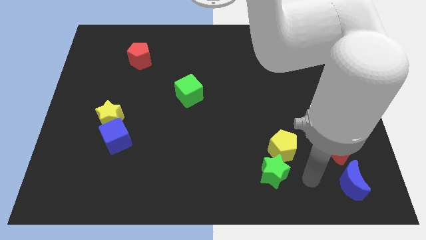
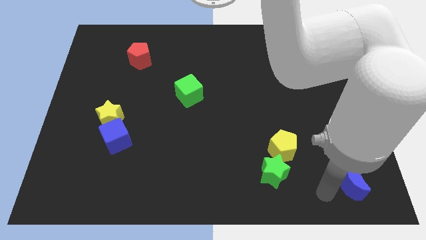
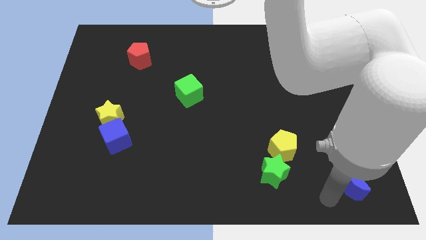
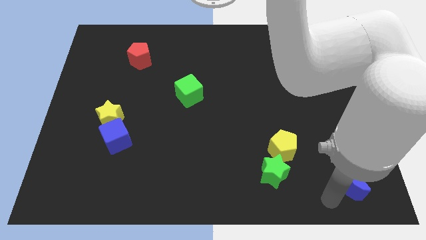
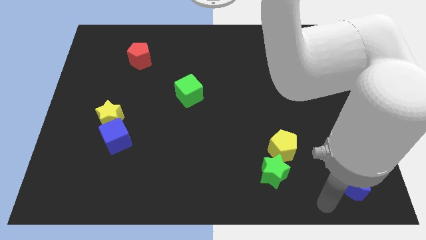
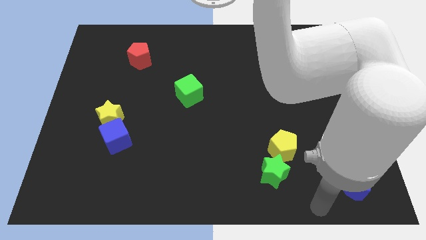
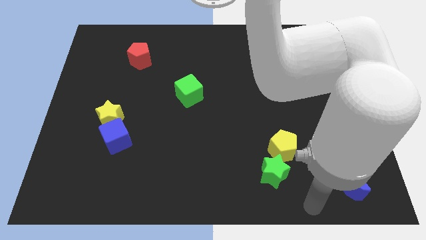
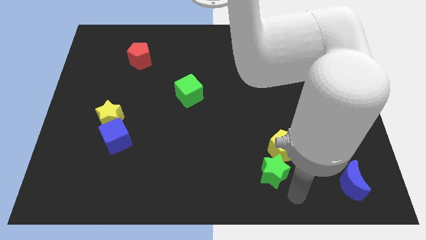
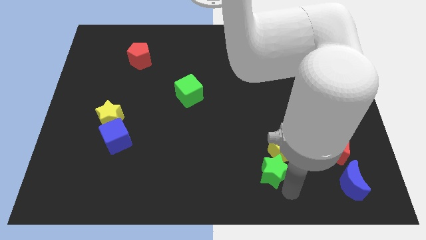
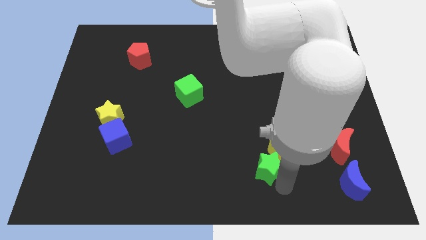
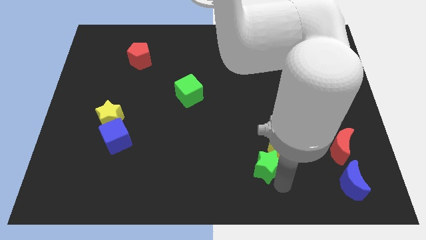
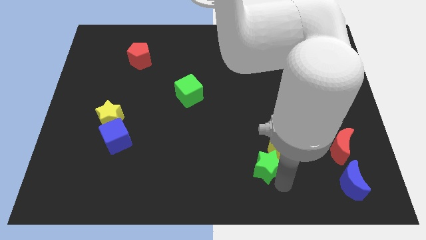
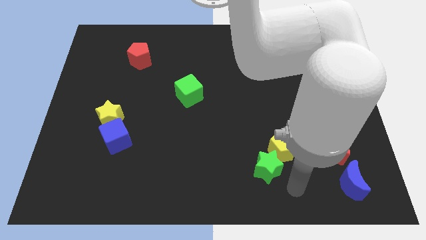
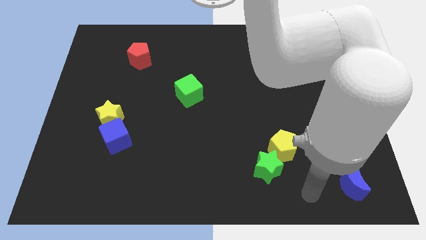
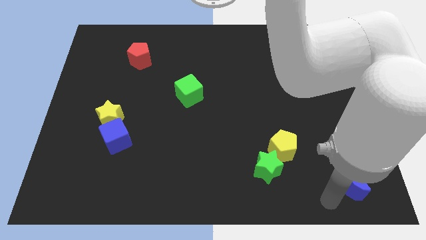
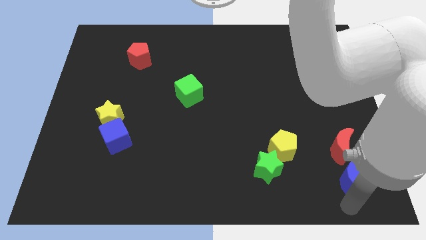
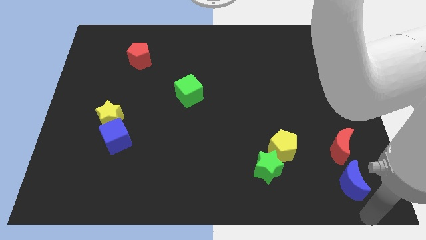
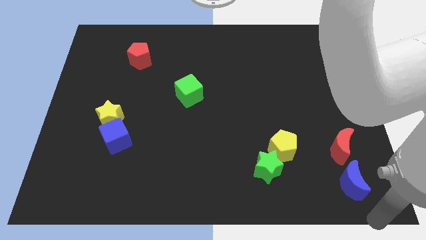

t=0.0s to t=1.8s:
move the green star towards the yellow pentagon

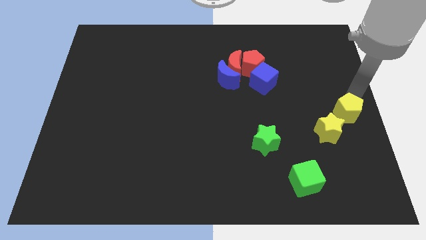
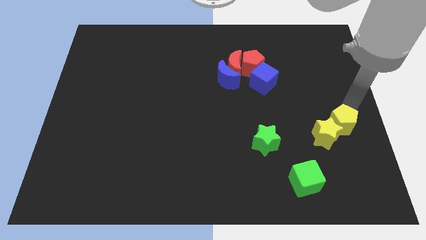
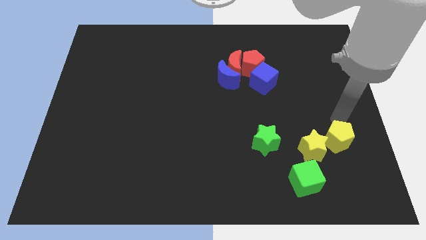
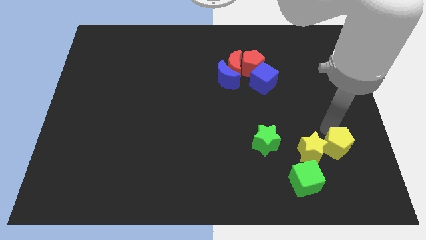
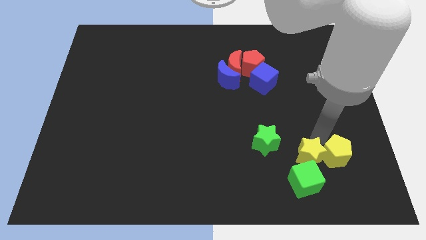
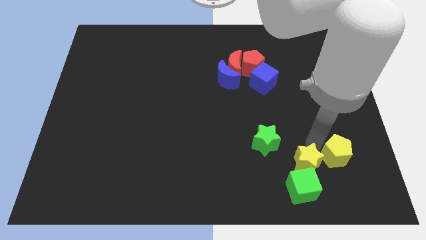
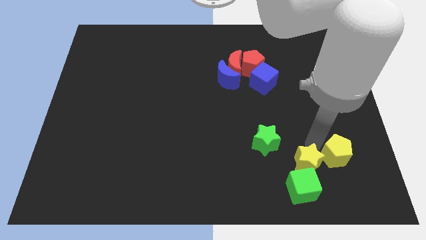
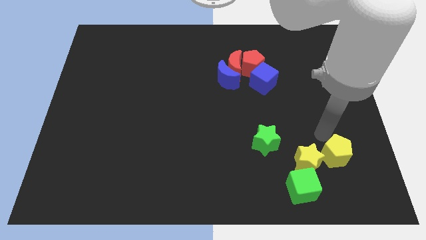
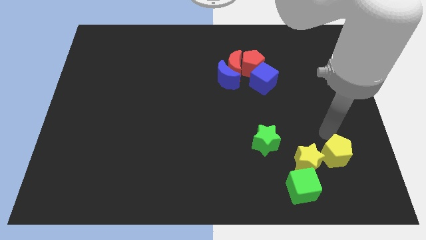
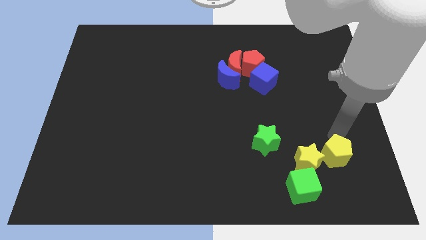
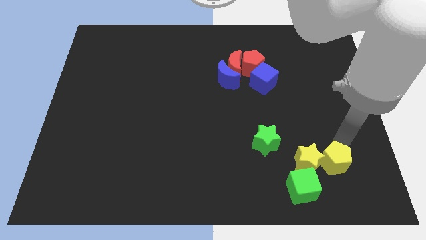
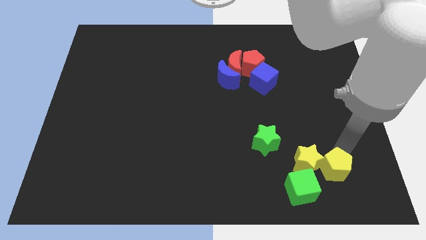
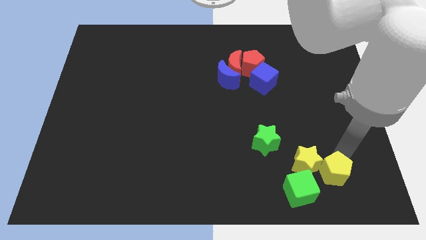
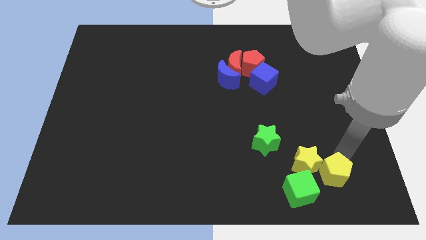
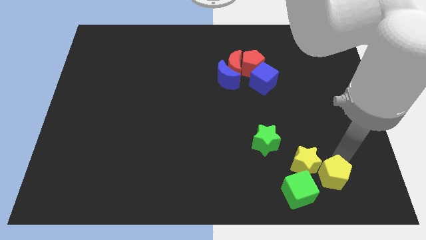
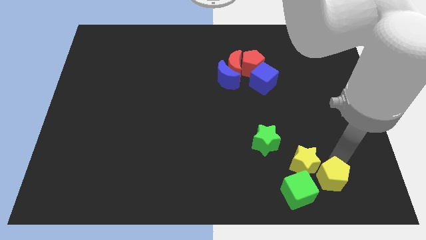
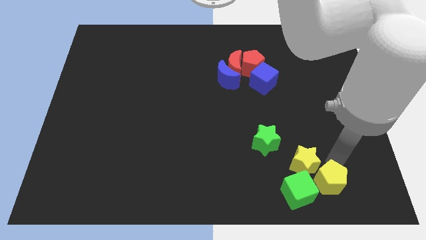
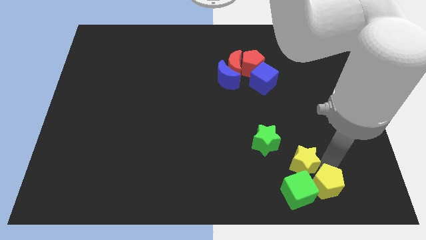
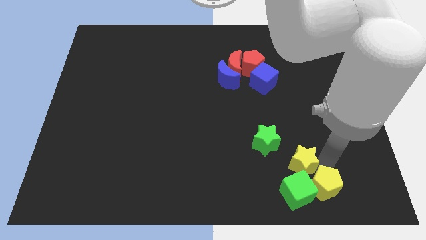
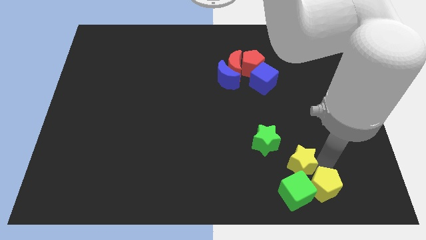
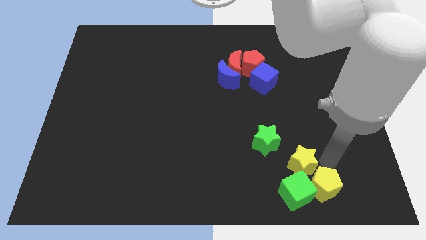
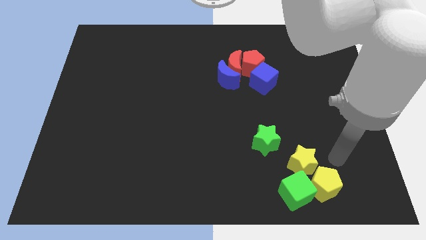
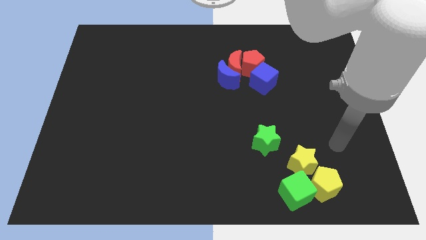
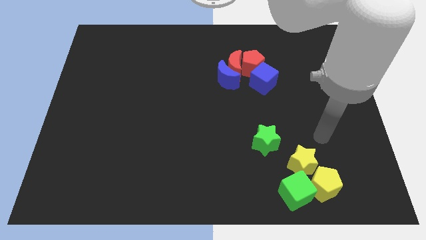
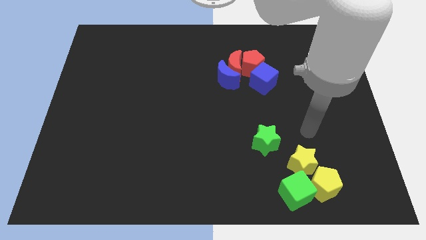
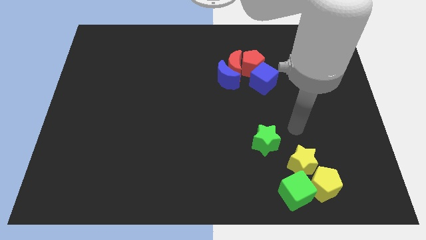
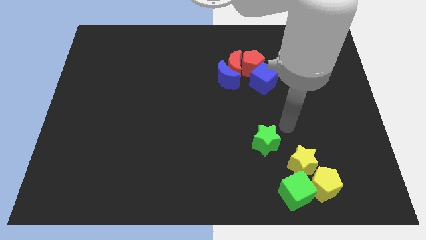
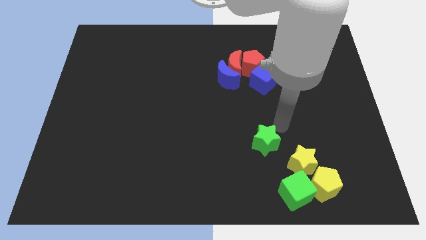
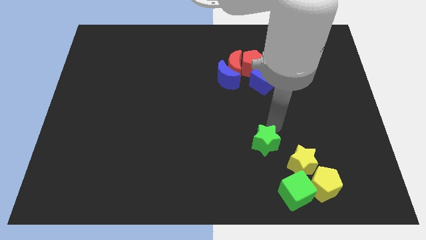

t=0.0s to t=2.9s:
push the yellow blocks and green cube towards the bottom side of the board

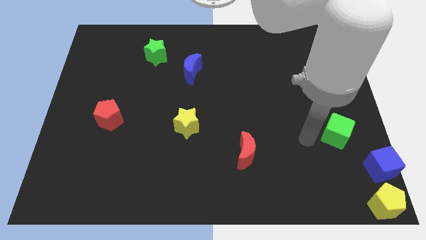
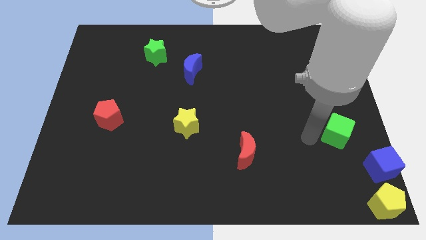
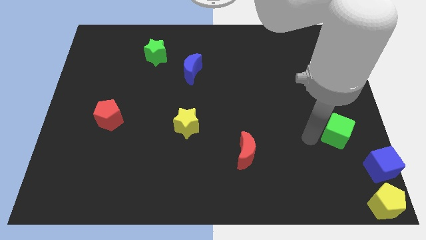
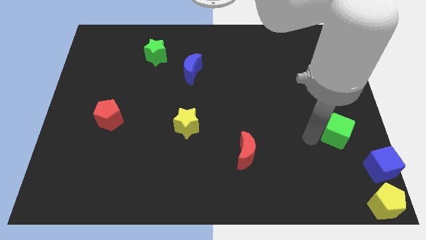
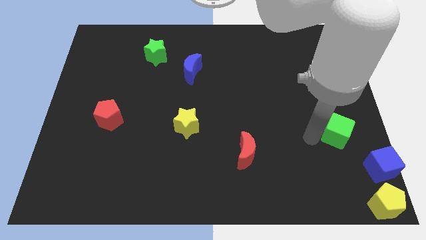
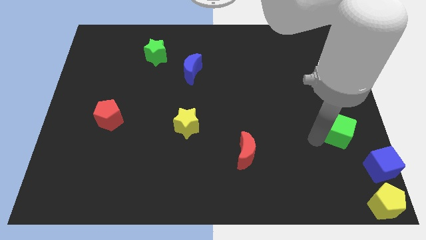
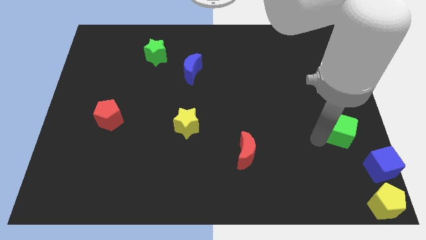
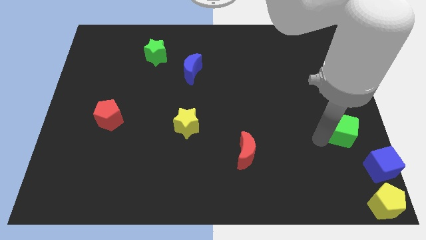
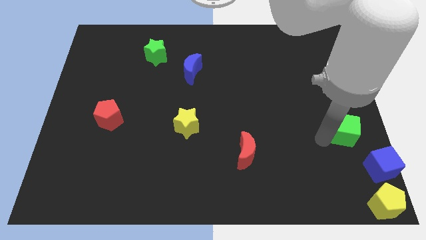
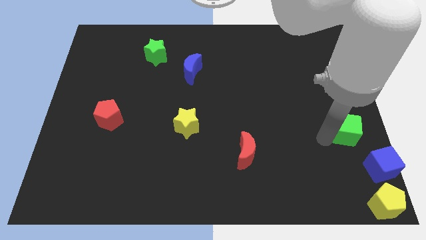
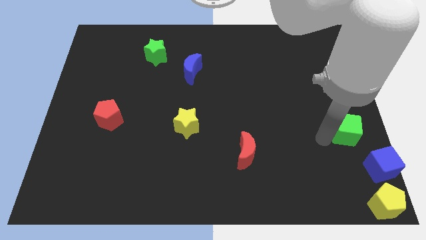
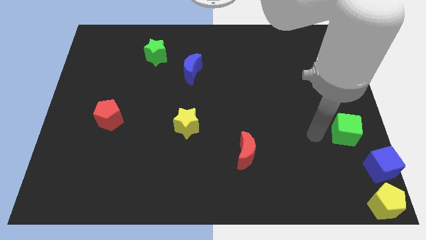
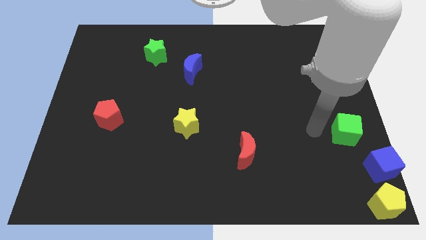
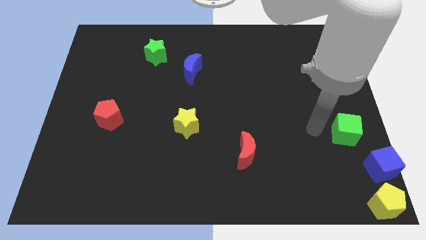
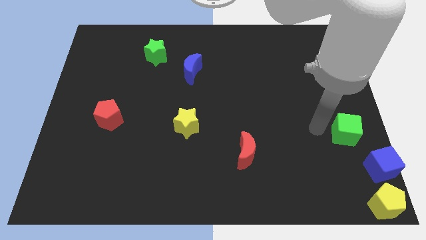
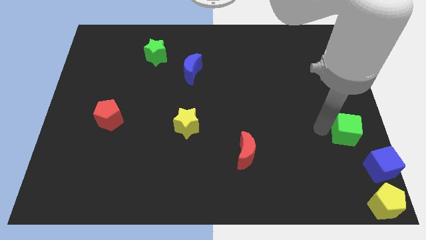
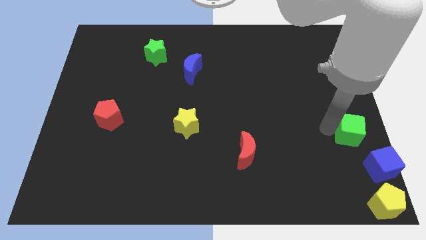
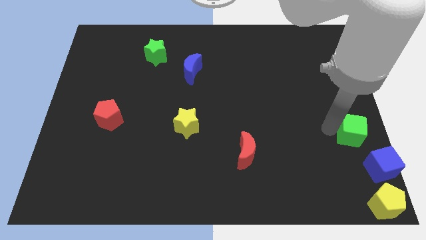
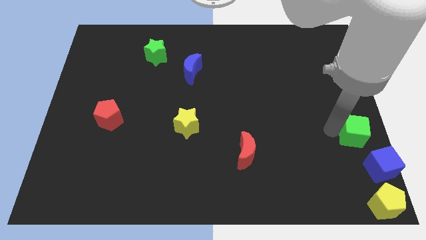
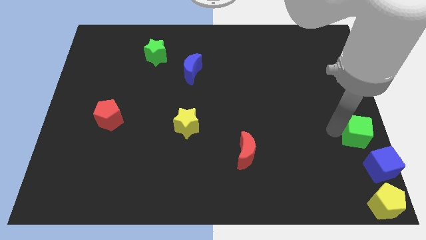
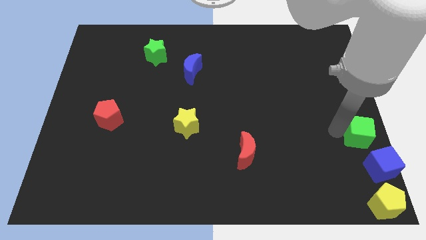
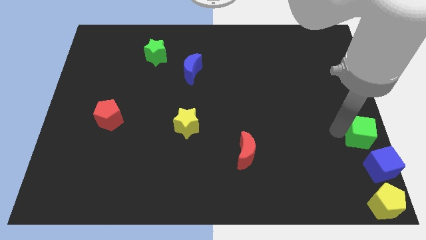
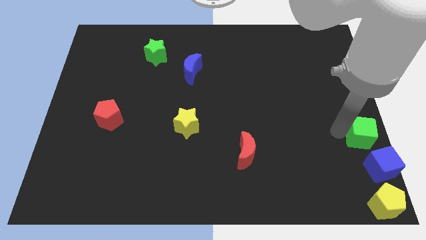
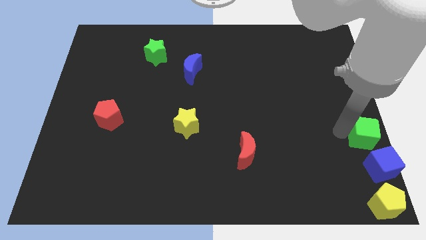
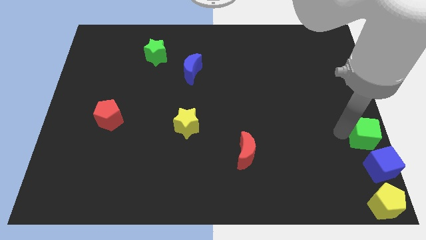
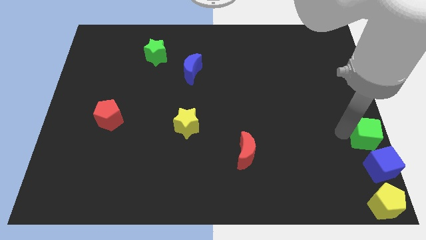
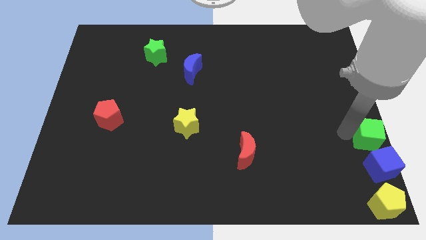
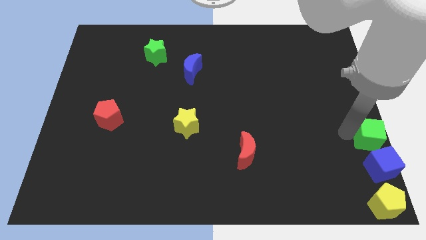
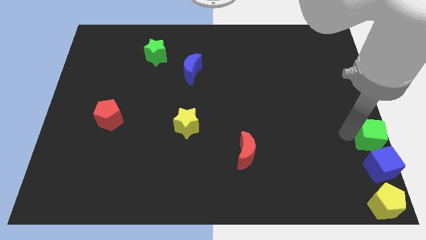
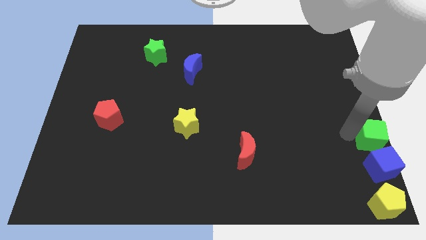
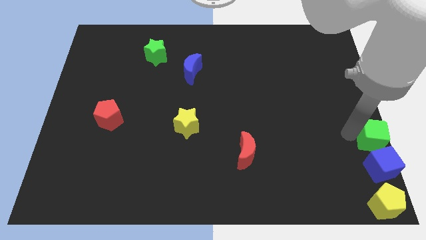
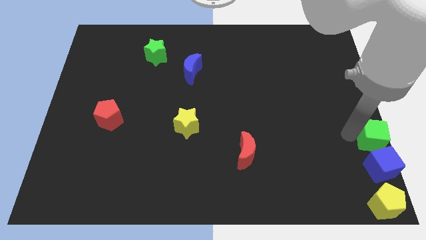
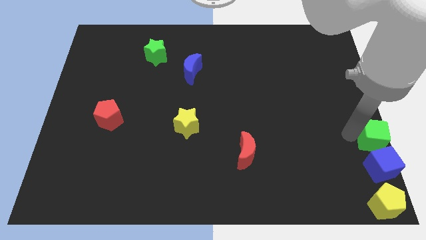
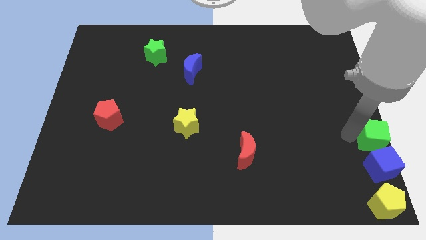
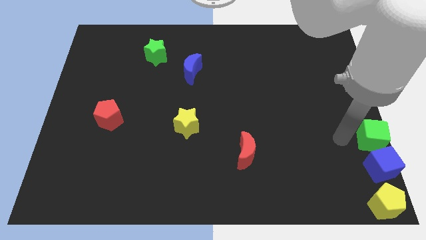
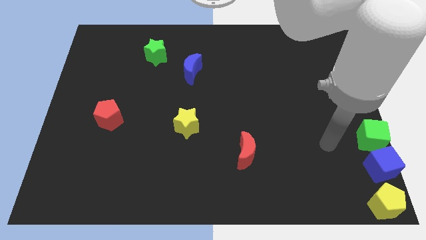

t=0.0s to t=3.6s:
put the green cube above the blue cube

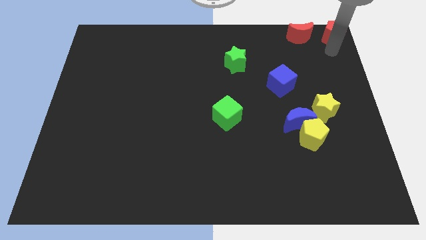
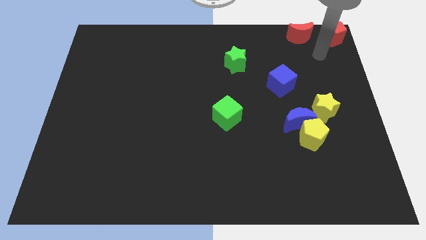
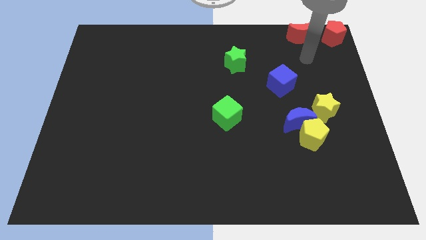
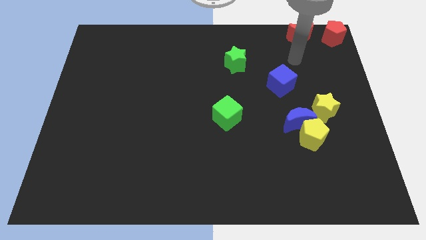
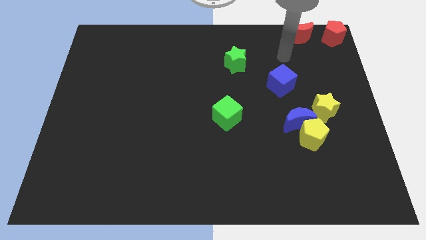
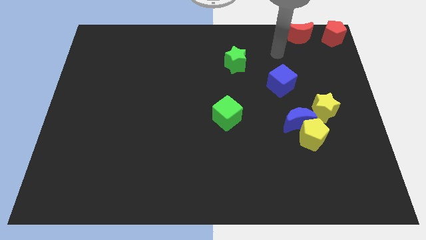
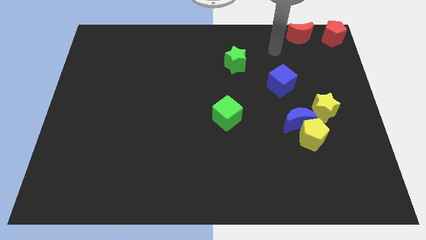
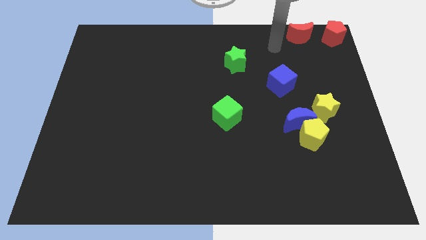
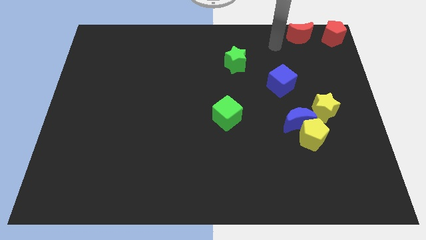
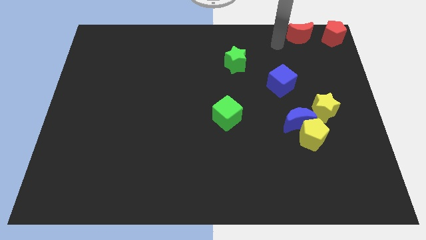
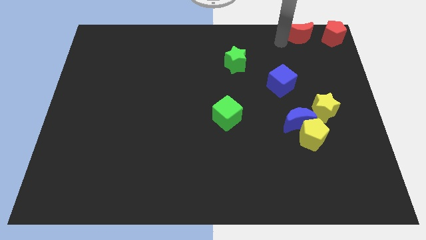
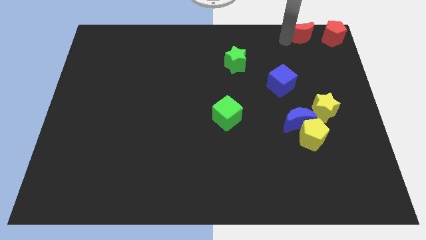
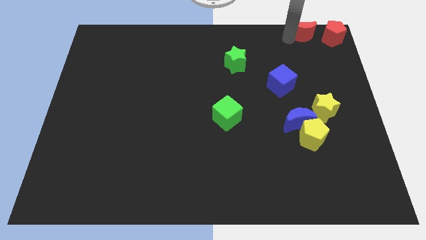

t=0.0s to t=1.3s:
push the red crescent slightly towards the red pentagon
